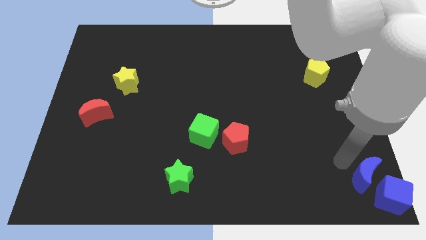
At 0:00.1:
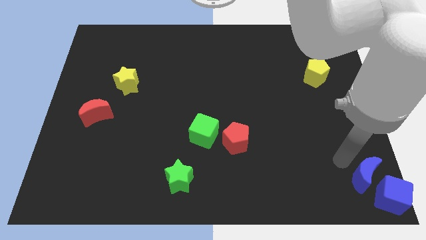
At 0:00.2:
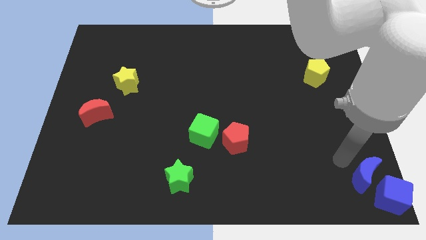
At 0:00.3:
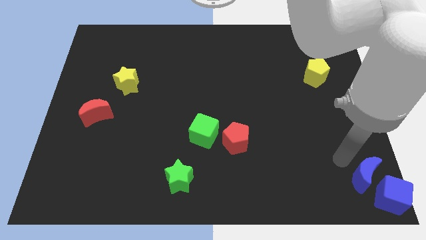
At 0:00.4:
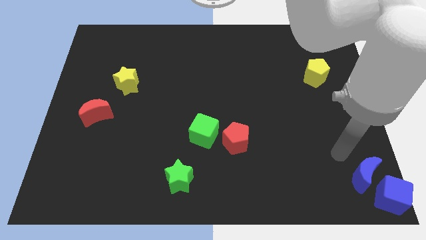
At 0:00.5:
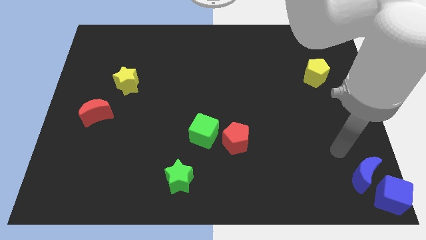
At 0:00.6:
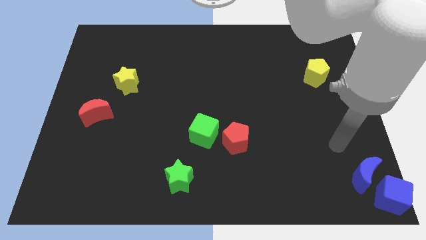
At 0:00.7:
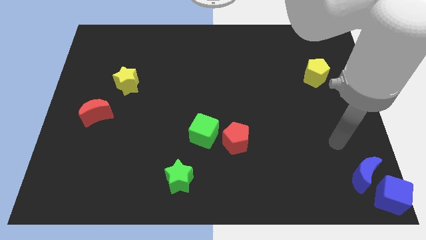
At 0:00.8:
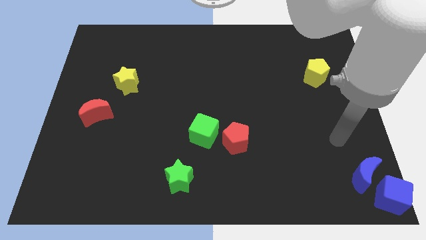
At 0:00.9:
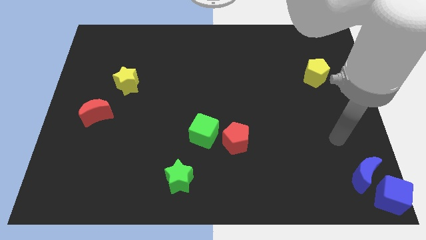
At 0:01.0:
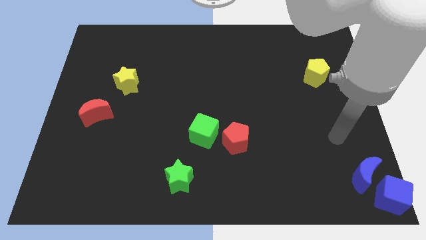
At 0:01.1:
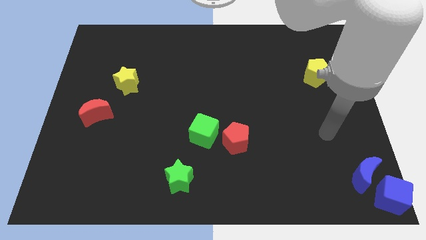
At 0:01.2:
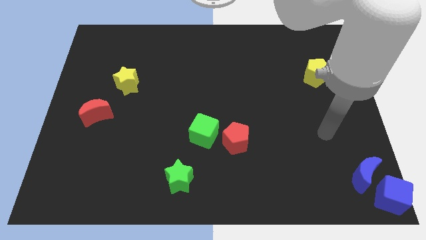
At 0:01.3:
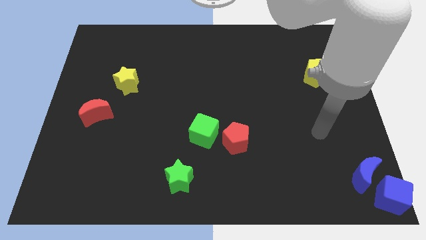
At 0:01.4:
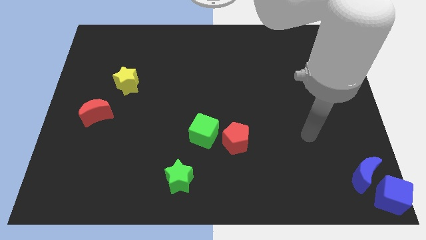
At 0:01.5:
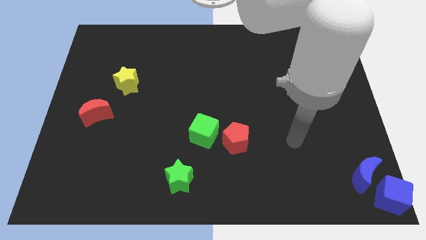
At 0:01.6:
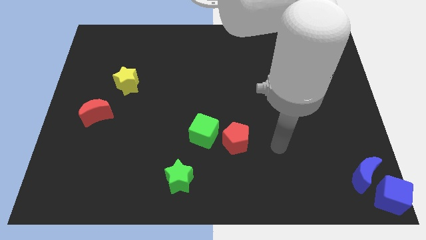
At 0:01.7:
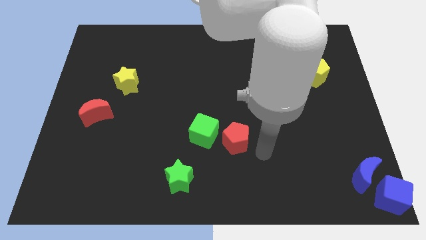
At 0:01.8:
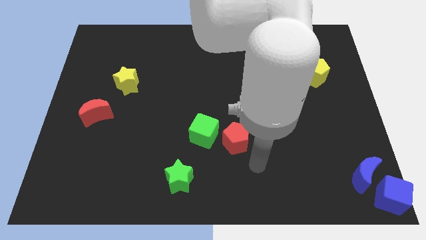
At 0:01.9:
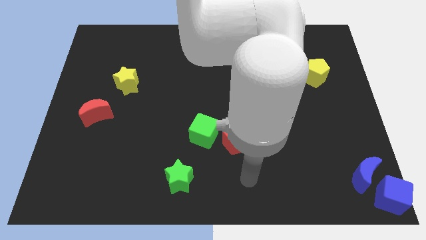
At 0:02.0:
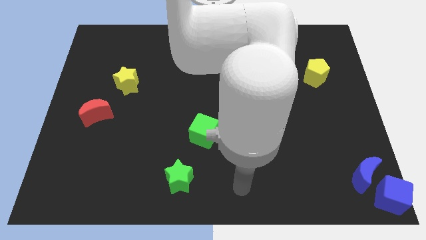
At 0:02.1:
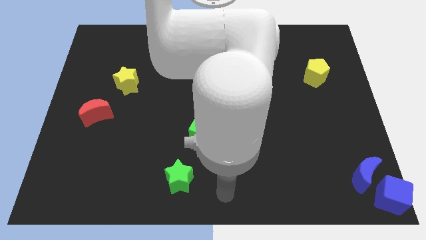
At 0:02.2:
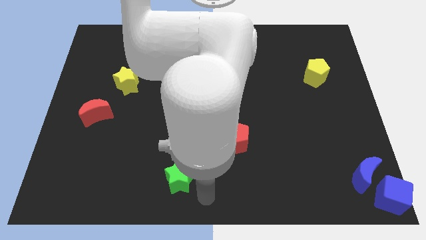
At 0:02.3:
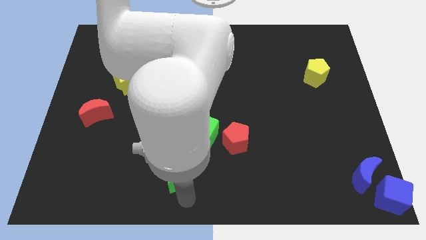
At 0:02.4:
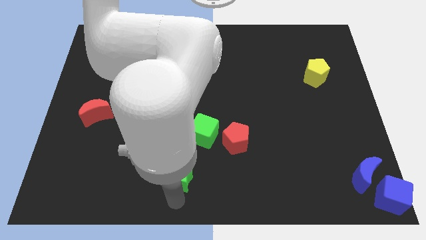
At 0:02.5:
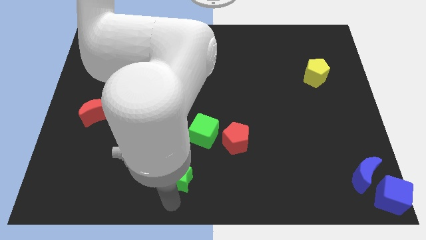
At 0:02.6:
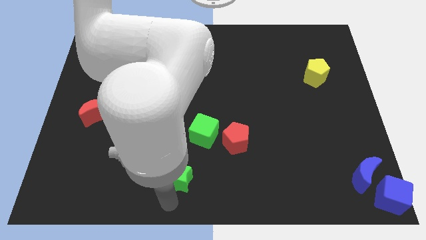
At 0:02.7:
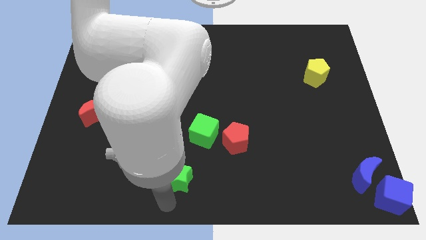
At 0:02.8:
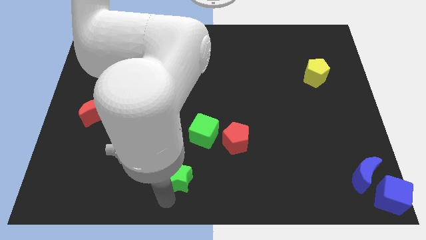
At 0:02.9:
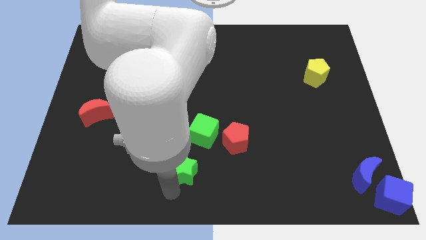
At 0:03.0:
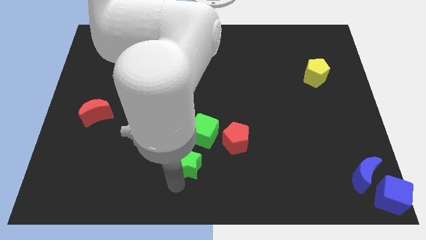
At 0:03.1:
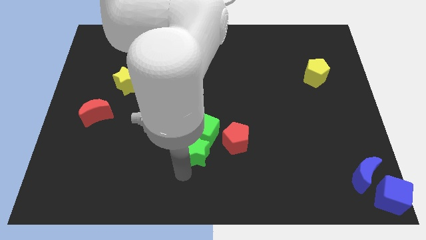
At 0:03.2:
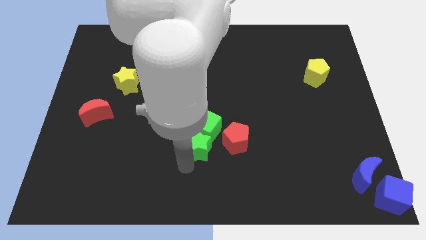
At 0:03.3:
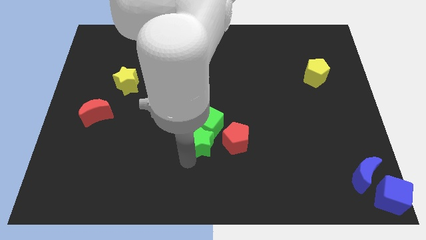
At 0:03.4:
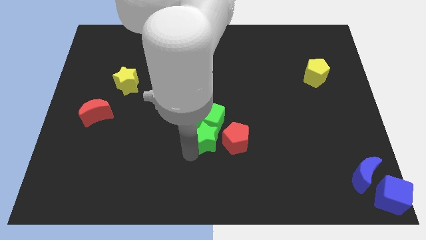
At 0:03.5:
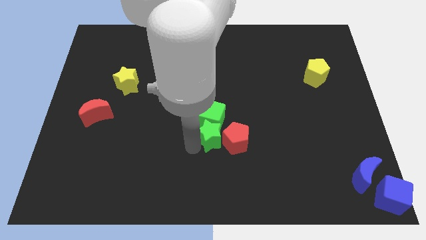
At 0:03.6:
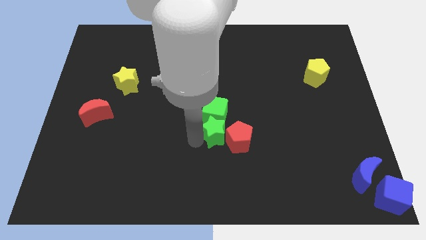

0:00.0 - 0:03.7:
push green star beside left to the red pentagon

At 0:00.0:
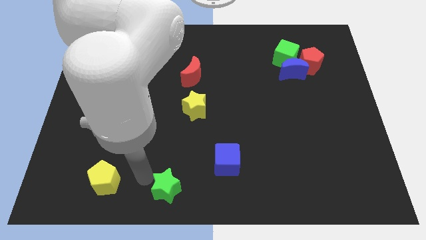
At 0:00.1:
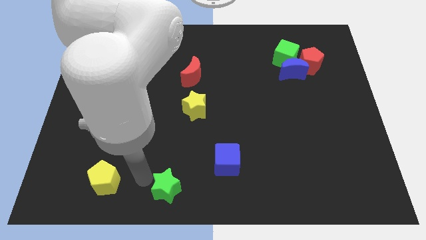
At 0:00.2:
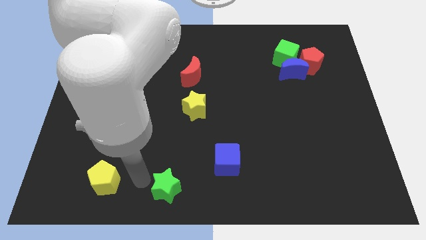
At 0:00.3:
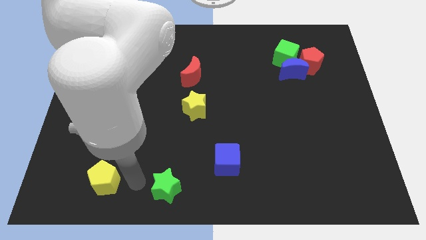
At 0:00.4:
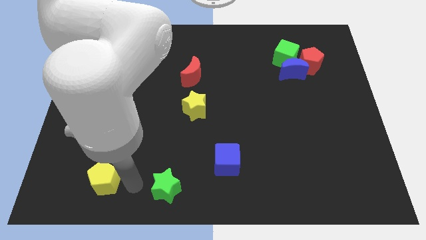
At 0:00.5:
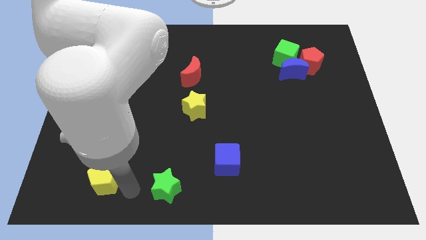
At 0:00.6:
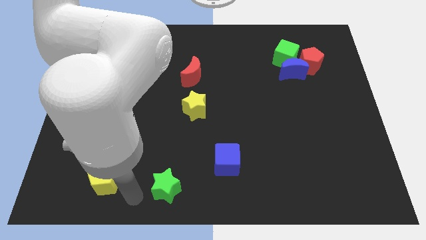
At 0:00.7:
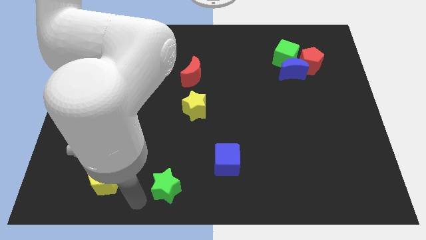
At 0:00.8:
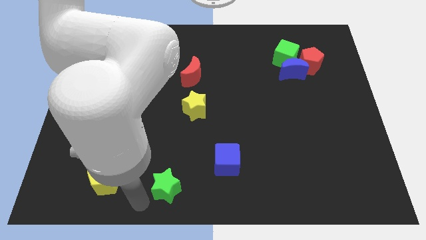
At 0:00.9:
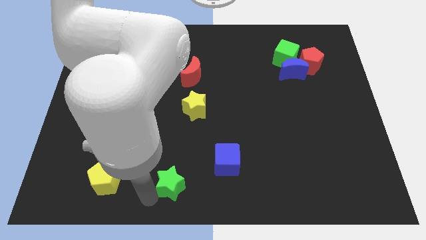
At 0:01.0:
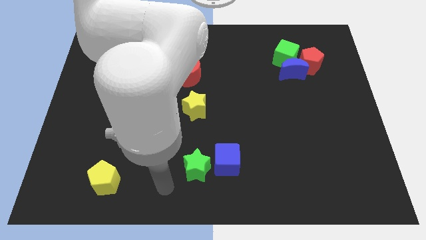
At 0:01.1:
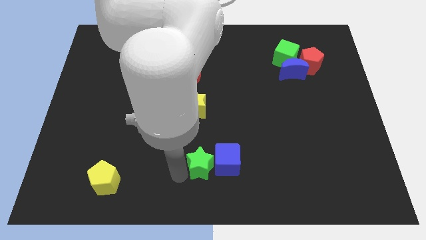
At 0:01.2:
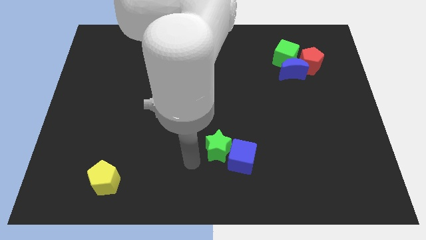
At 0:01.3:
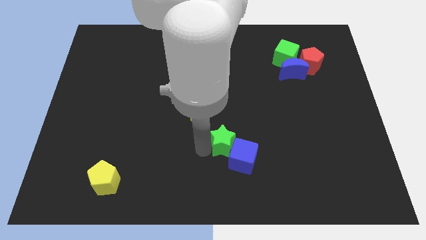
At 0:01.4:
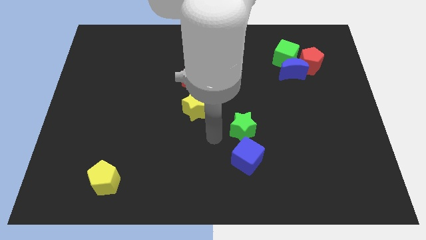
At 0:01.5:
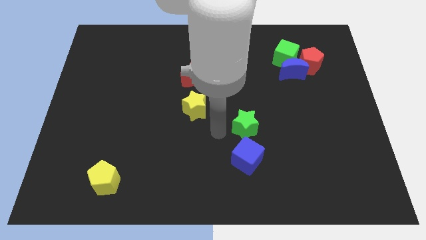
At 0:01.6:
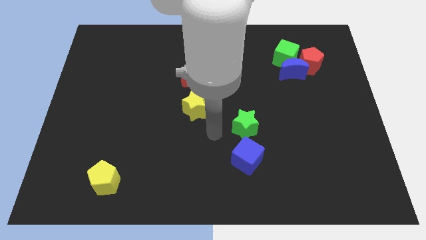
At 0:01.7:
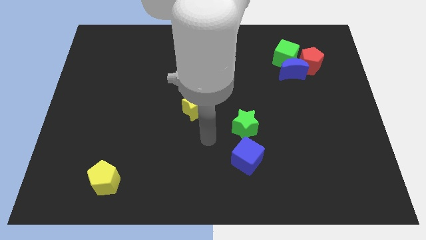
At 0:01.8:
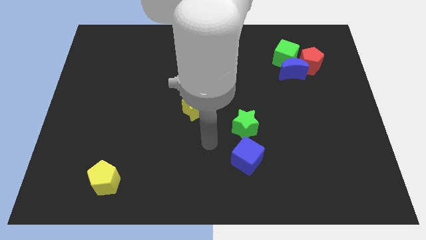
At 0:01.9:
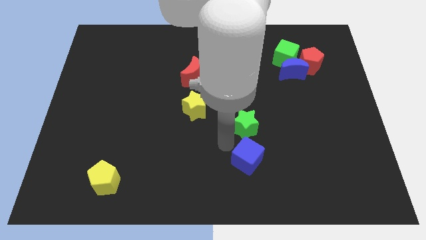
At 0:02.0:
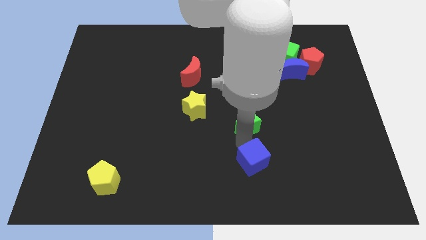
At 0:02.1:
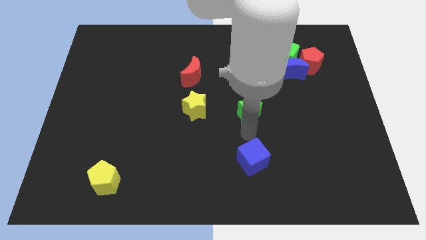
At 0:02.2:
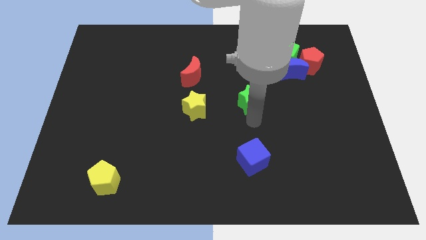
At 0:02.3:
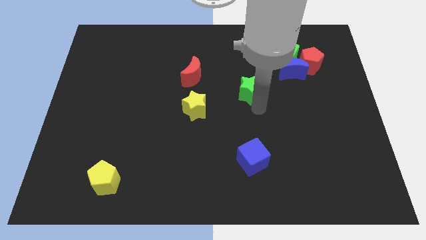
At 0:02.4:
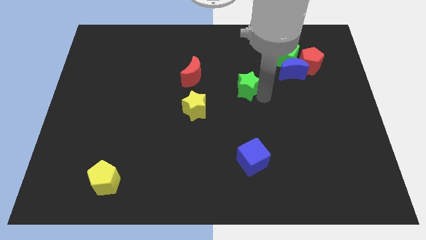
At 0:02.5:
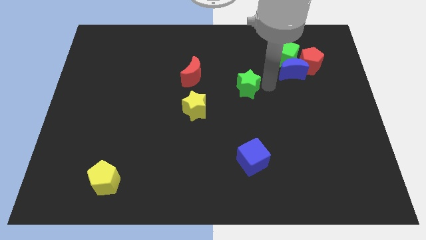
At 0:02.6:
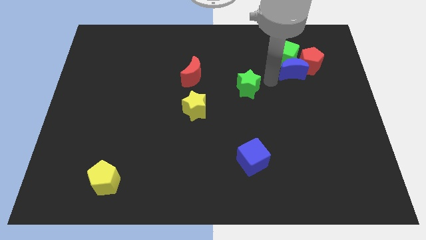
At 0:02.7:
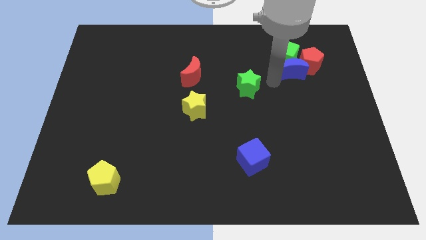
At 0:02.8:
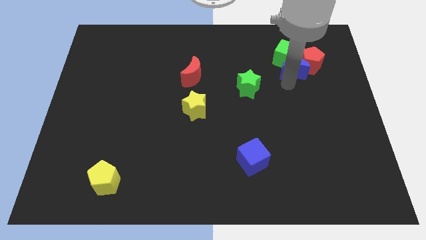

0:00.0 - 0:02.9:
push the green star towards the top right

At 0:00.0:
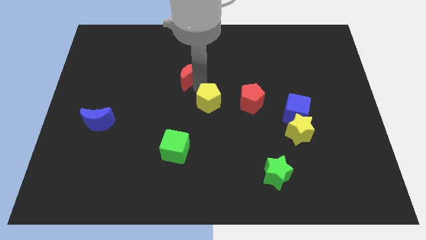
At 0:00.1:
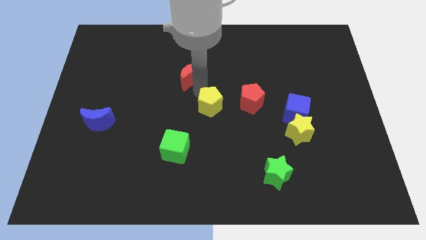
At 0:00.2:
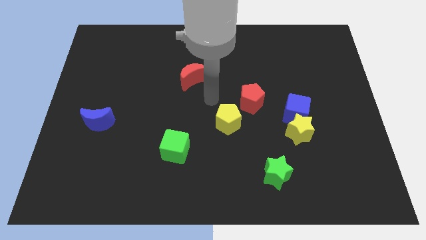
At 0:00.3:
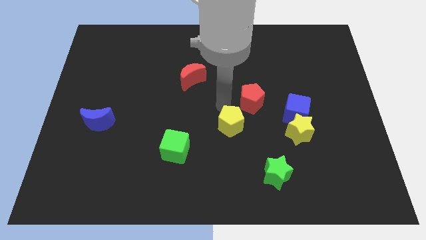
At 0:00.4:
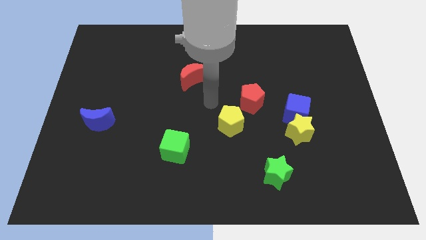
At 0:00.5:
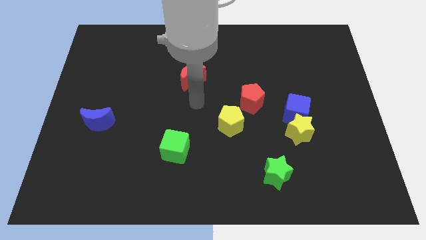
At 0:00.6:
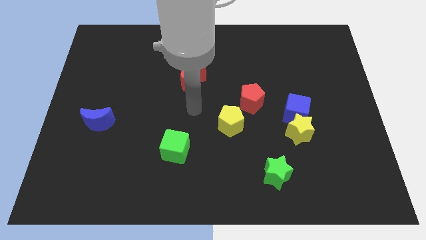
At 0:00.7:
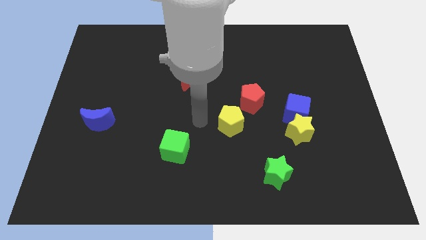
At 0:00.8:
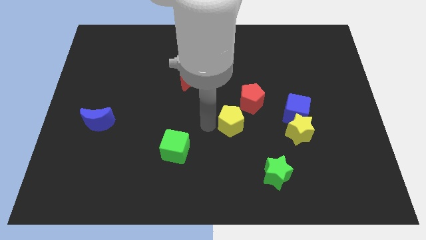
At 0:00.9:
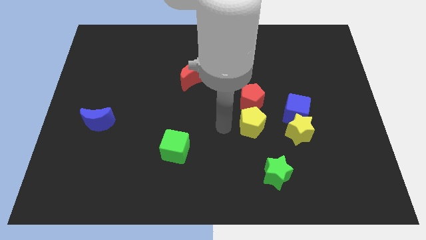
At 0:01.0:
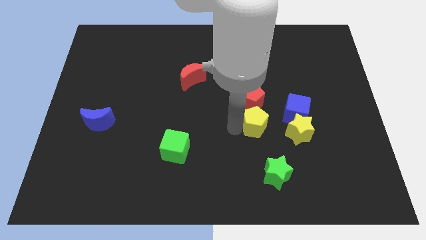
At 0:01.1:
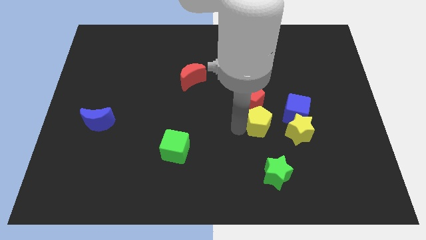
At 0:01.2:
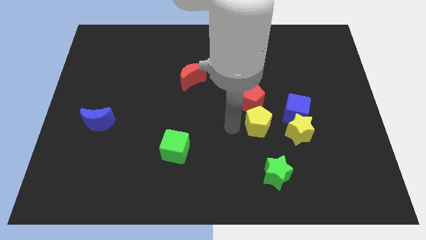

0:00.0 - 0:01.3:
place yellow pentagon to the bottom of the red pentagon

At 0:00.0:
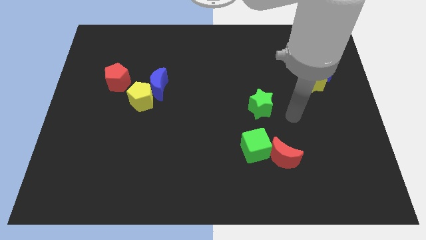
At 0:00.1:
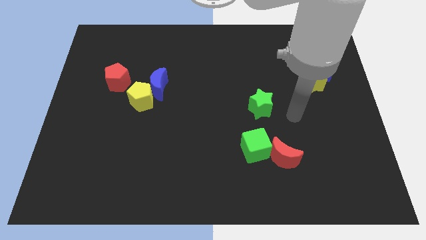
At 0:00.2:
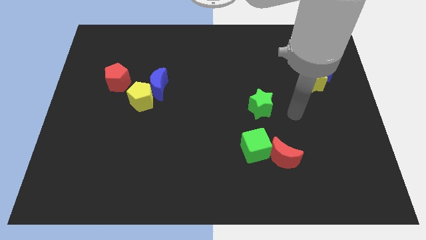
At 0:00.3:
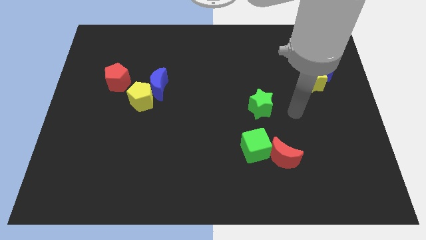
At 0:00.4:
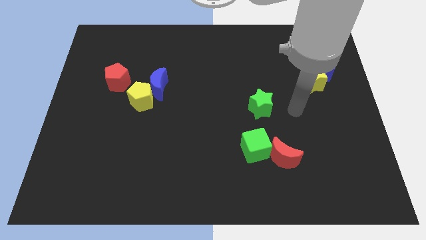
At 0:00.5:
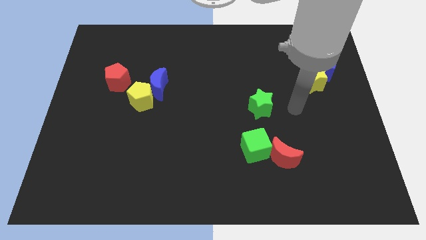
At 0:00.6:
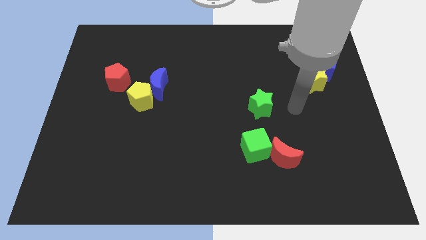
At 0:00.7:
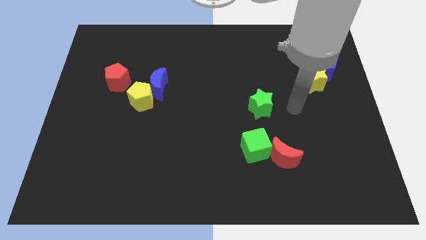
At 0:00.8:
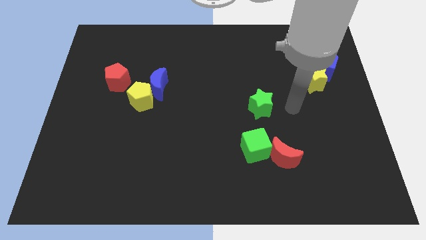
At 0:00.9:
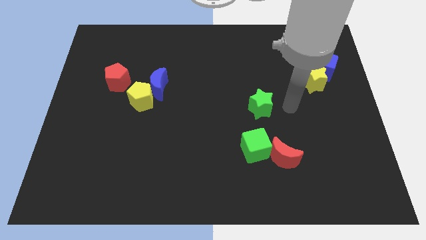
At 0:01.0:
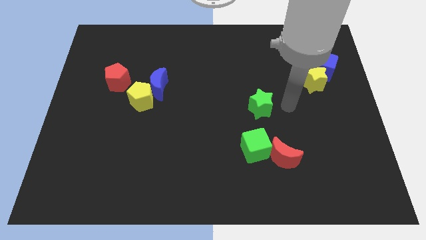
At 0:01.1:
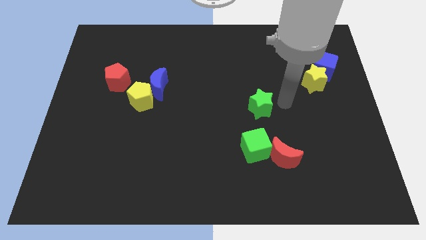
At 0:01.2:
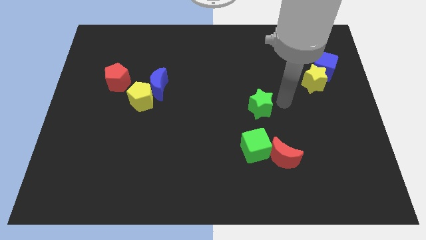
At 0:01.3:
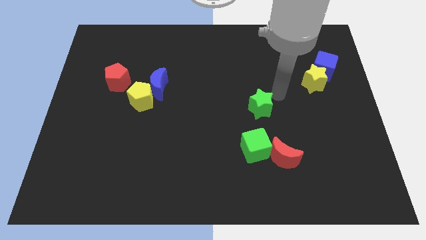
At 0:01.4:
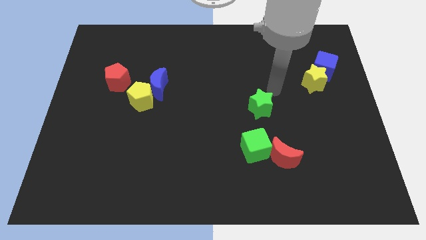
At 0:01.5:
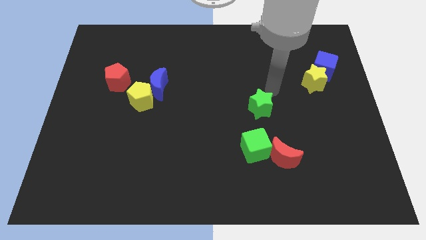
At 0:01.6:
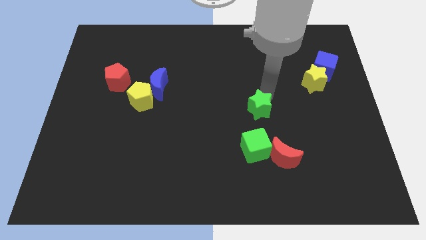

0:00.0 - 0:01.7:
point the arm above the green star
